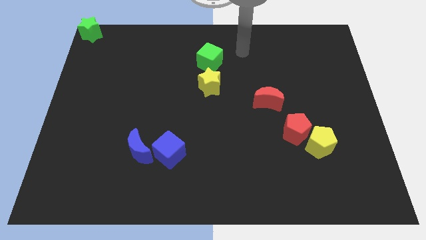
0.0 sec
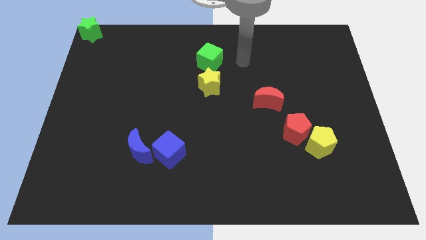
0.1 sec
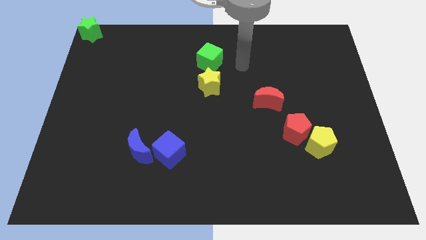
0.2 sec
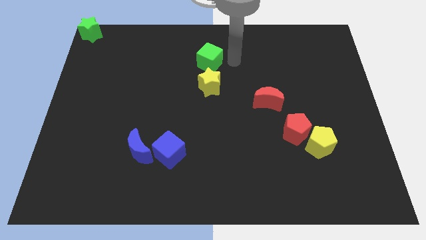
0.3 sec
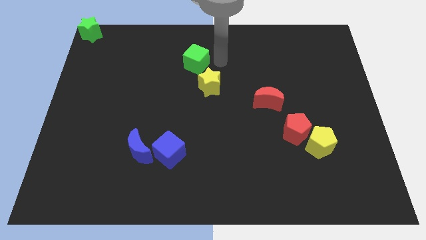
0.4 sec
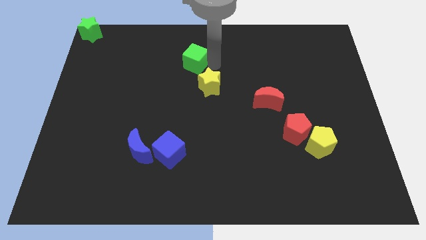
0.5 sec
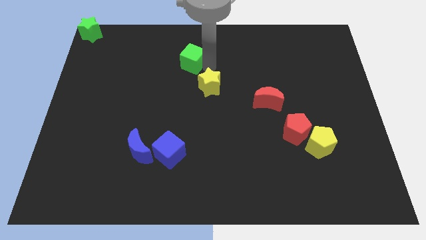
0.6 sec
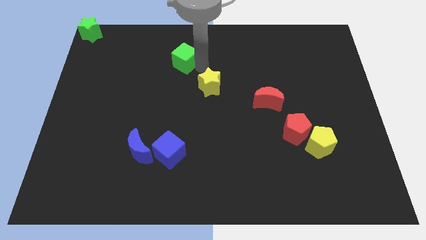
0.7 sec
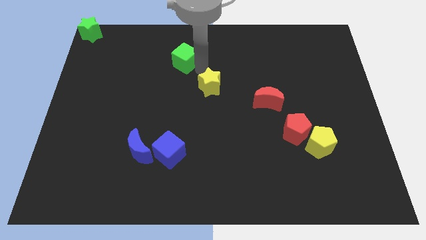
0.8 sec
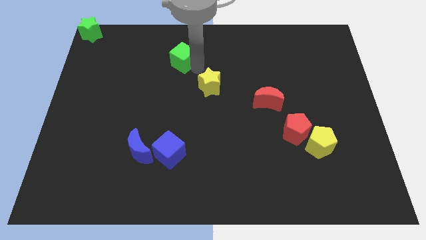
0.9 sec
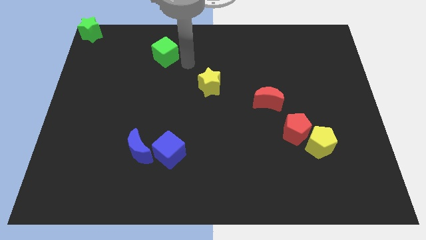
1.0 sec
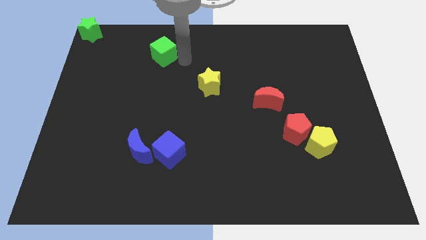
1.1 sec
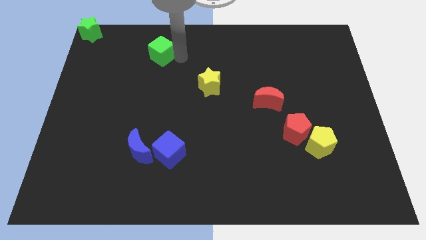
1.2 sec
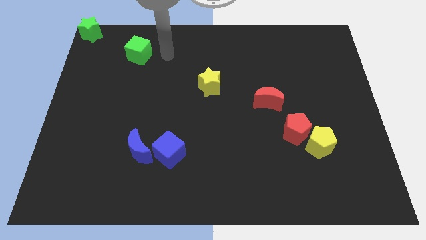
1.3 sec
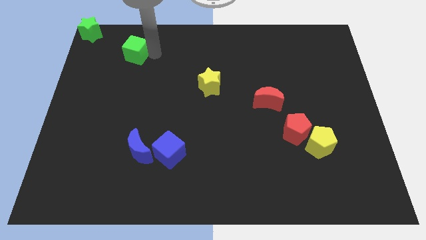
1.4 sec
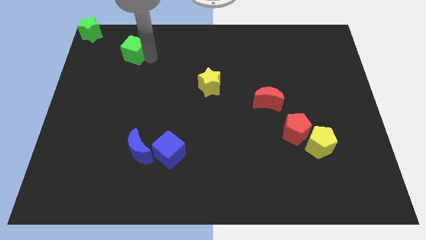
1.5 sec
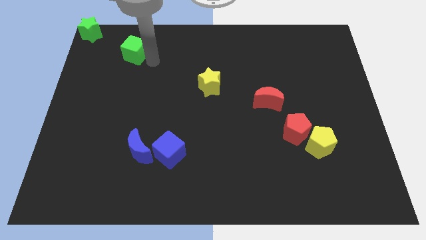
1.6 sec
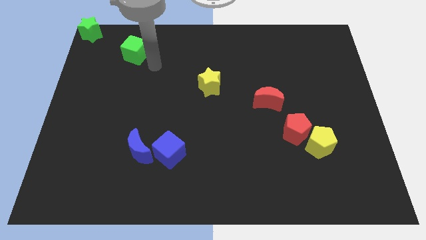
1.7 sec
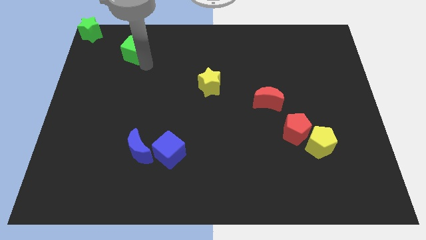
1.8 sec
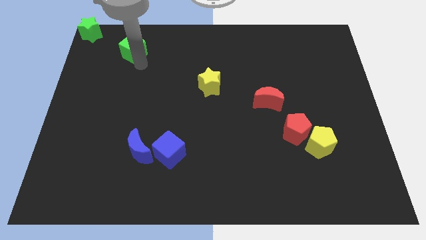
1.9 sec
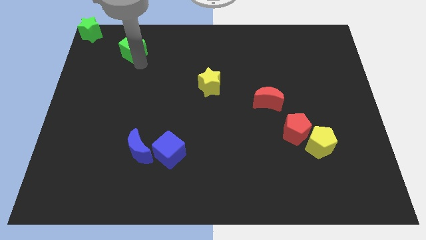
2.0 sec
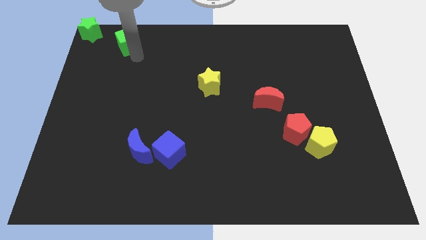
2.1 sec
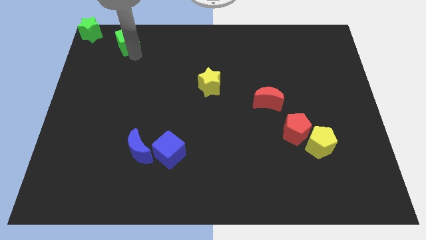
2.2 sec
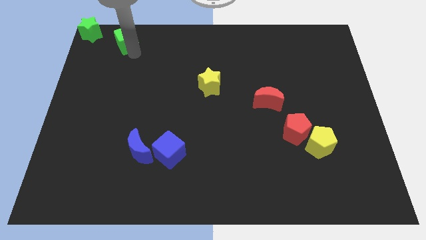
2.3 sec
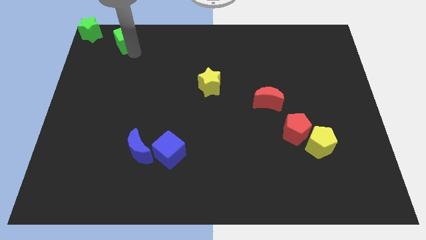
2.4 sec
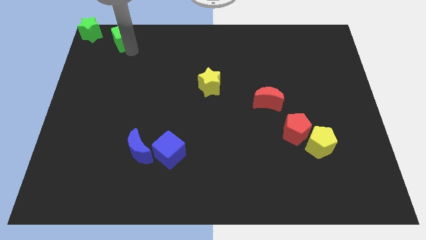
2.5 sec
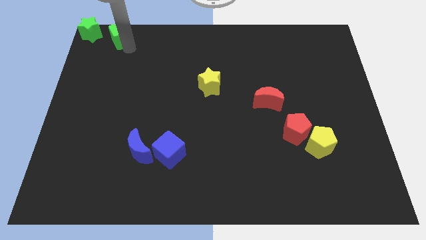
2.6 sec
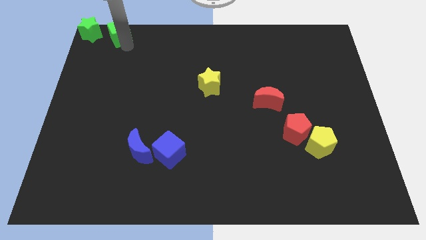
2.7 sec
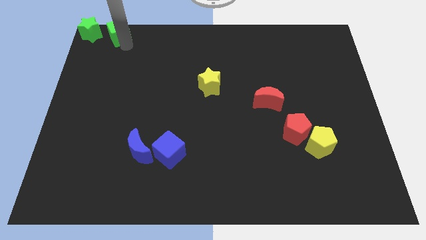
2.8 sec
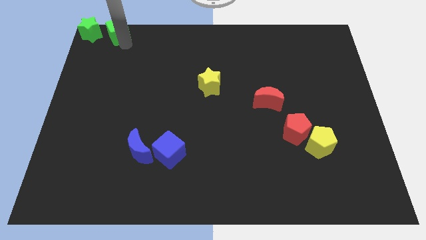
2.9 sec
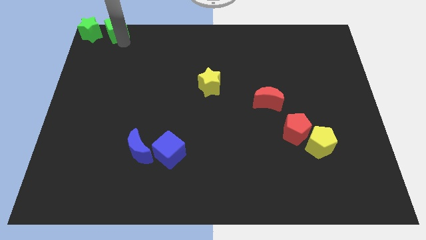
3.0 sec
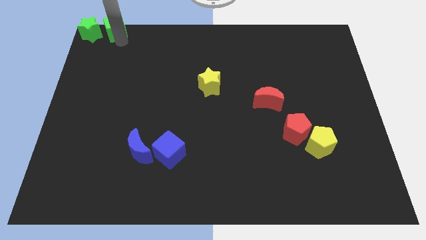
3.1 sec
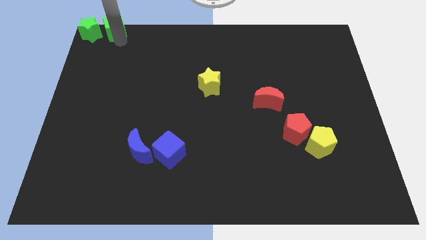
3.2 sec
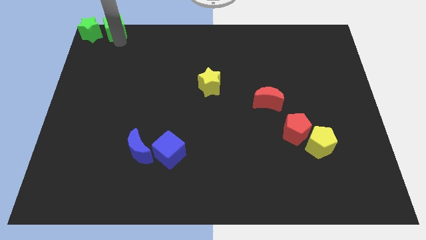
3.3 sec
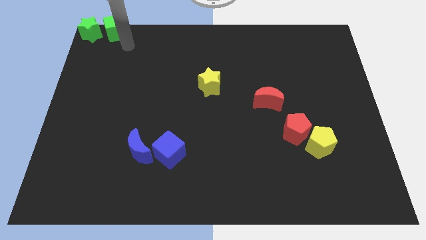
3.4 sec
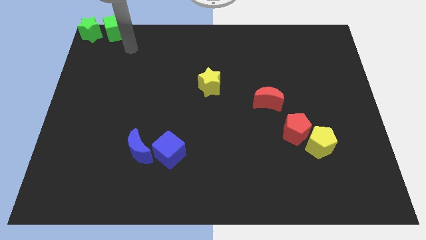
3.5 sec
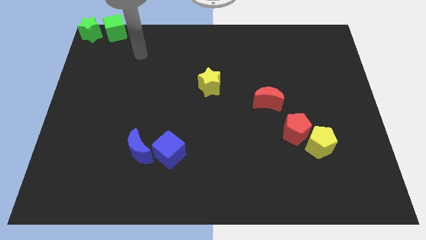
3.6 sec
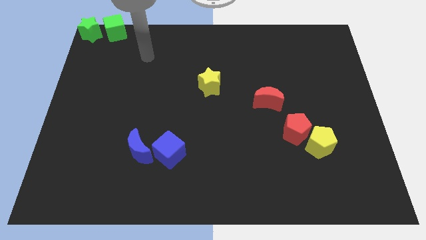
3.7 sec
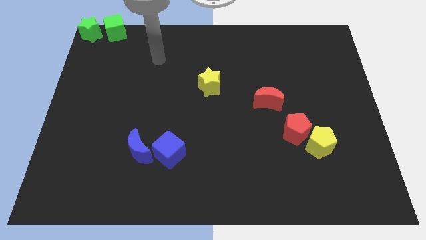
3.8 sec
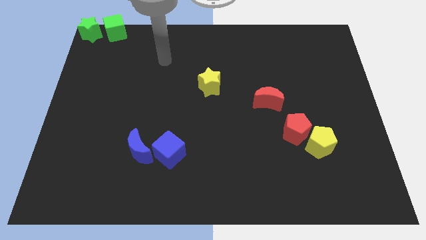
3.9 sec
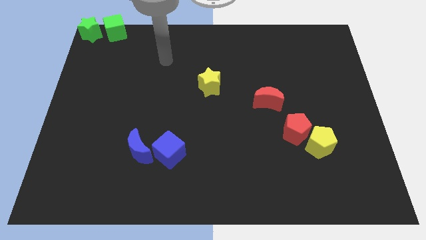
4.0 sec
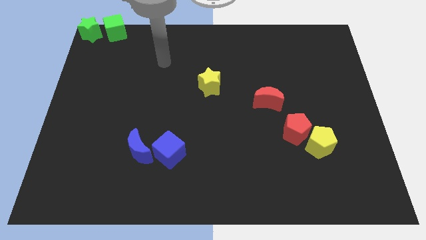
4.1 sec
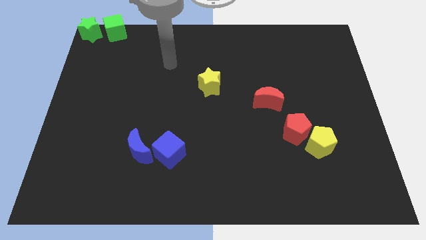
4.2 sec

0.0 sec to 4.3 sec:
place the green cube beside the green star

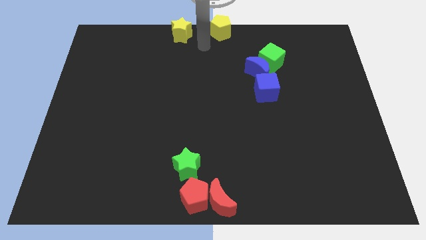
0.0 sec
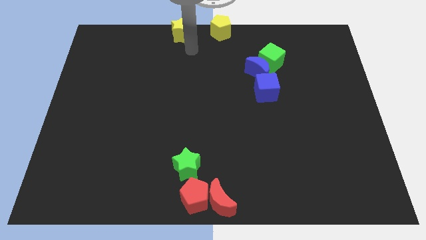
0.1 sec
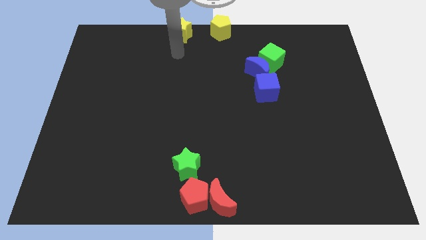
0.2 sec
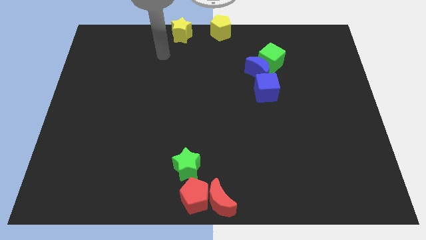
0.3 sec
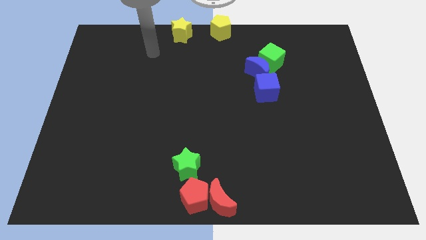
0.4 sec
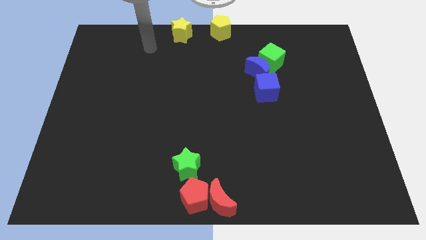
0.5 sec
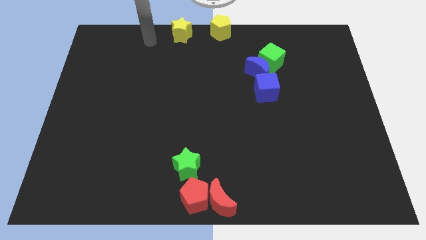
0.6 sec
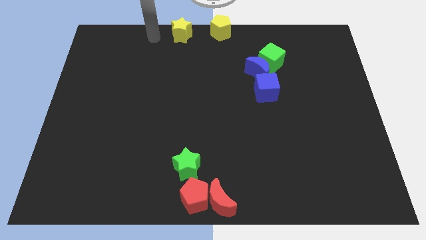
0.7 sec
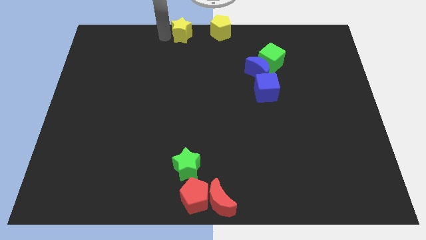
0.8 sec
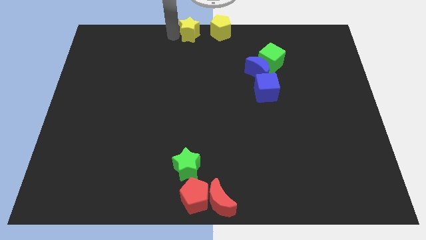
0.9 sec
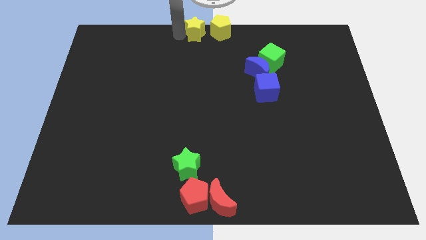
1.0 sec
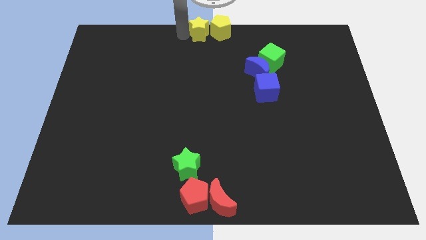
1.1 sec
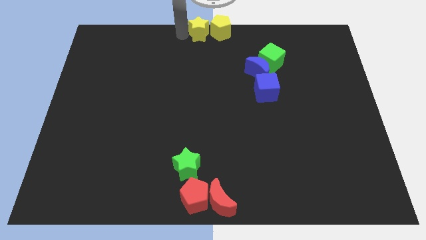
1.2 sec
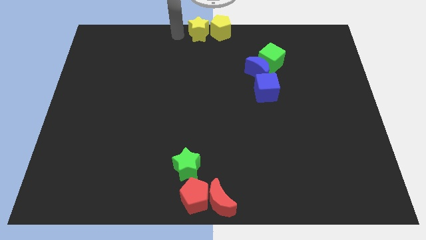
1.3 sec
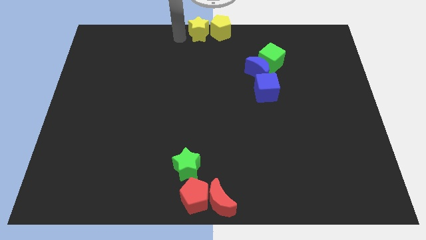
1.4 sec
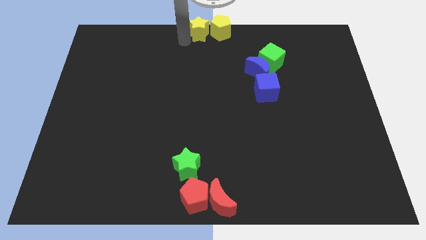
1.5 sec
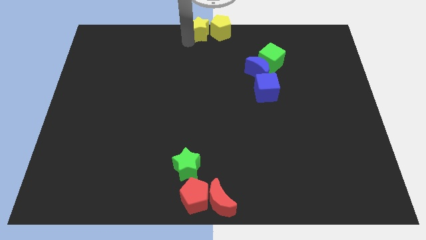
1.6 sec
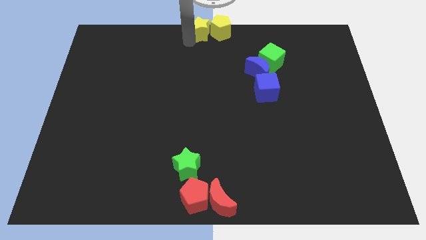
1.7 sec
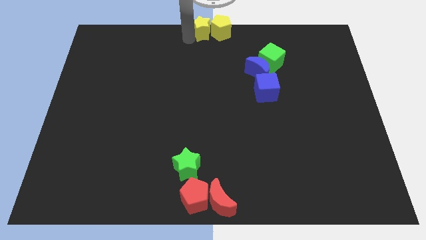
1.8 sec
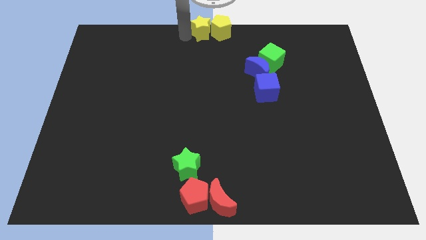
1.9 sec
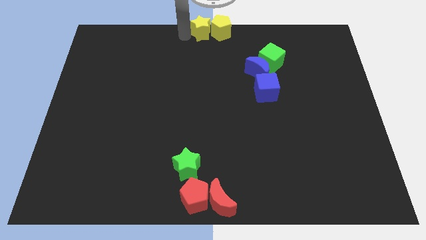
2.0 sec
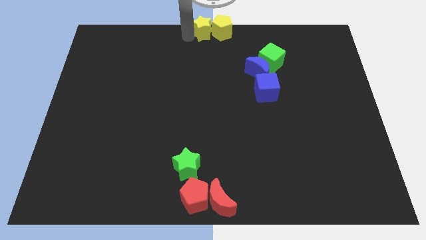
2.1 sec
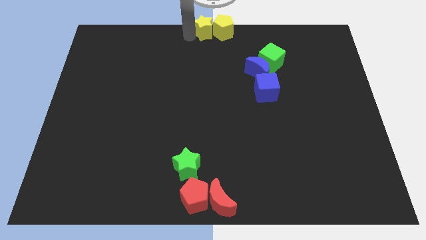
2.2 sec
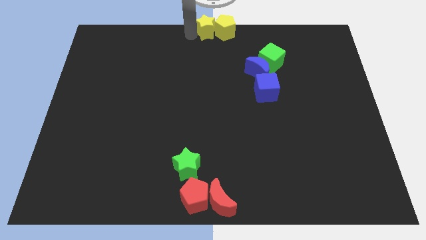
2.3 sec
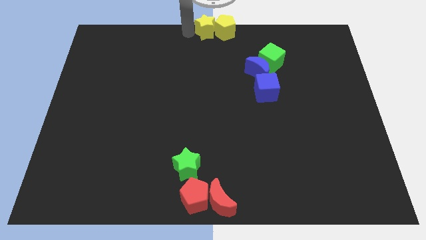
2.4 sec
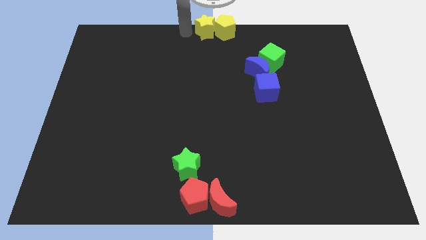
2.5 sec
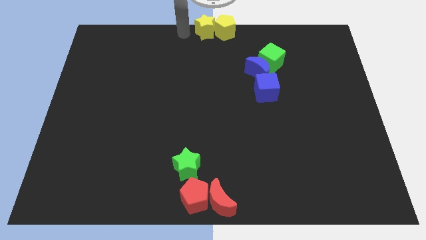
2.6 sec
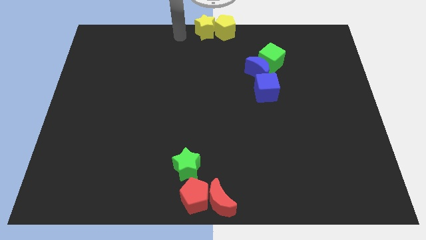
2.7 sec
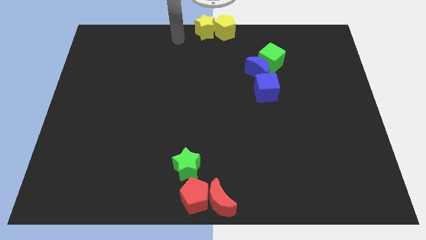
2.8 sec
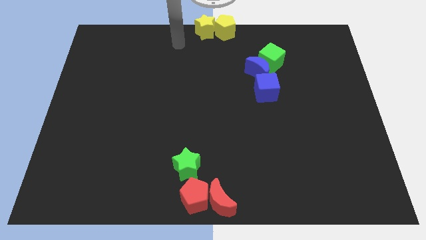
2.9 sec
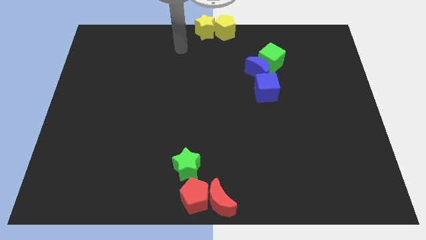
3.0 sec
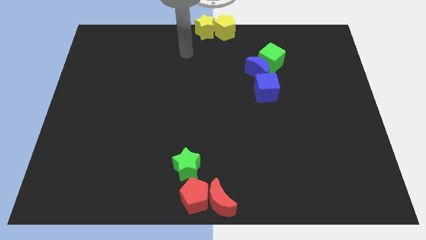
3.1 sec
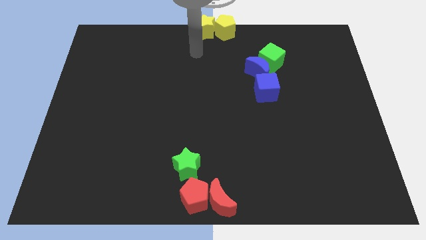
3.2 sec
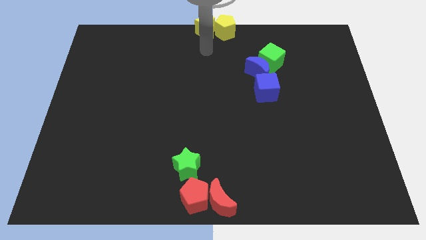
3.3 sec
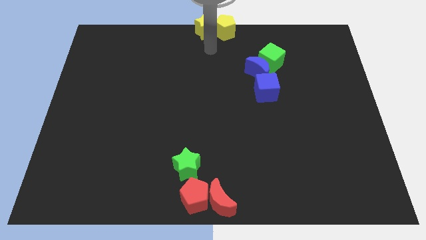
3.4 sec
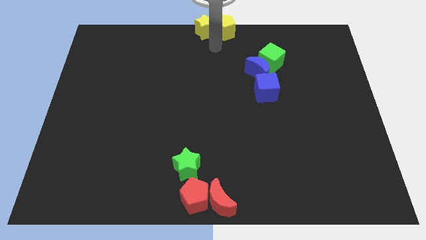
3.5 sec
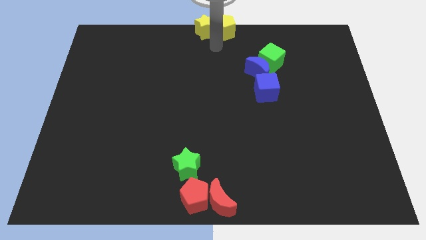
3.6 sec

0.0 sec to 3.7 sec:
move the yellow star slightly into the yellow pentagon

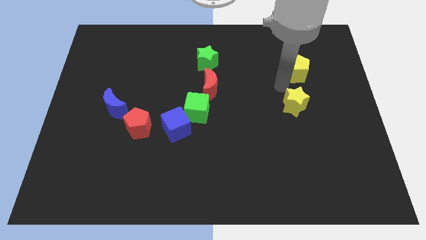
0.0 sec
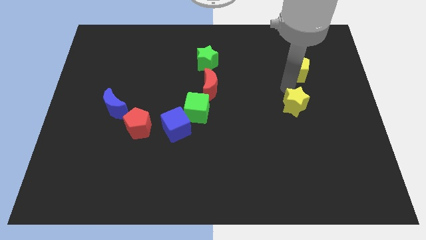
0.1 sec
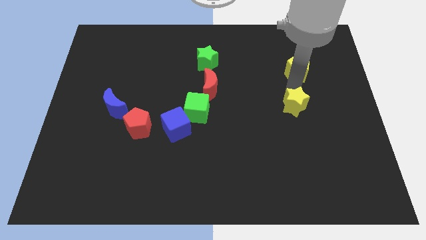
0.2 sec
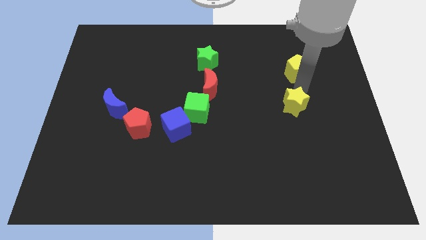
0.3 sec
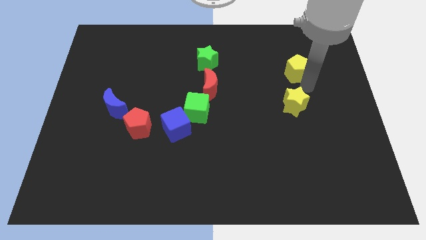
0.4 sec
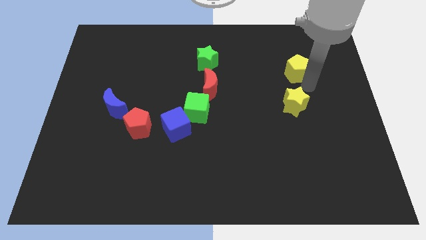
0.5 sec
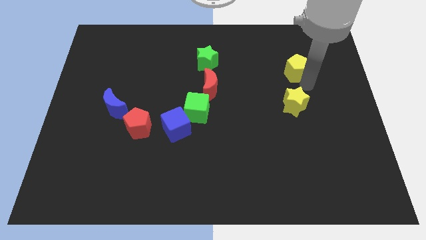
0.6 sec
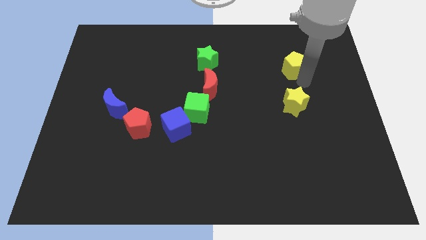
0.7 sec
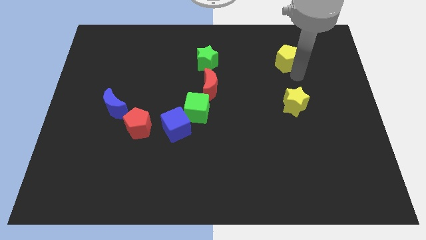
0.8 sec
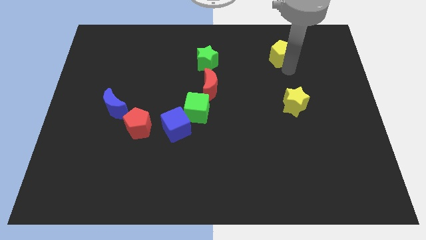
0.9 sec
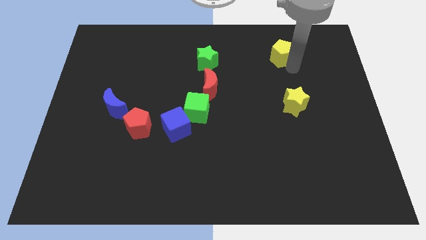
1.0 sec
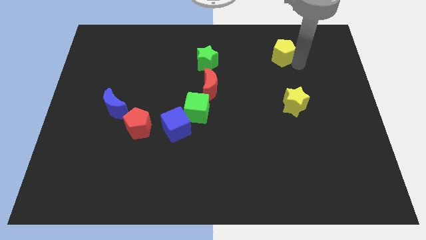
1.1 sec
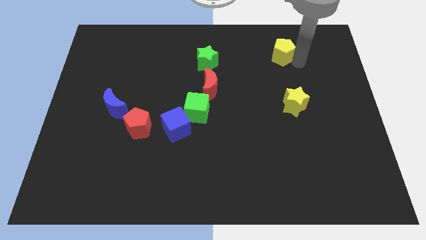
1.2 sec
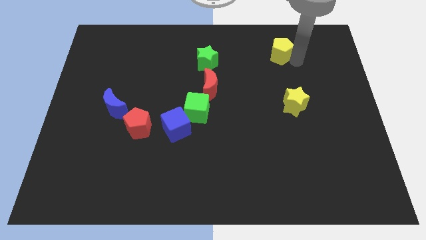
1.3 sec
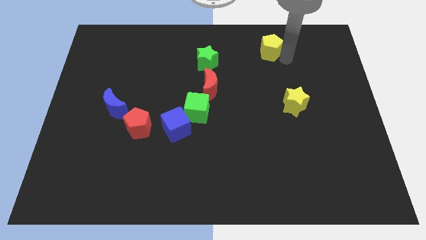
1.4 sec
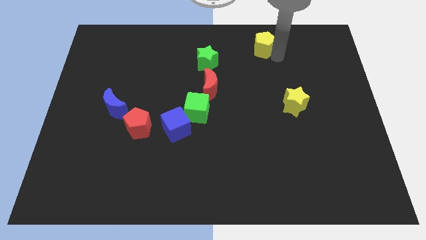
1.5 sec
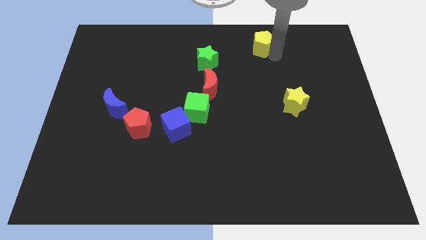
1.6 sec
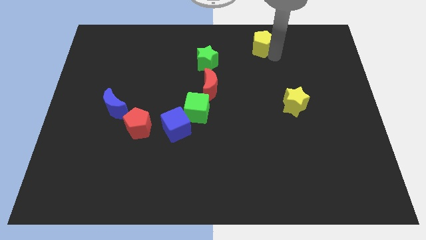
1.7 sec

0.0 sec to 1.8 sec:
push yellow pentagon to the top of the board slightly
